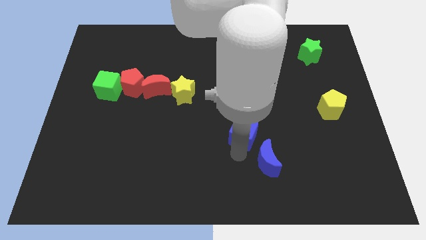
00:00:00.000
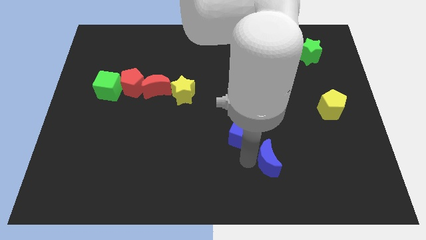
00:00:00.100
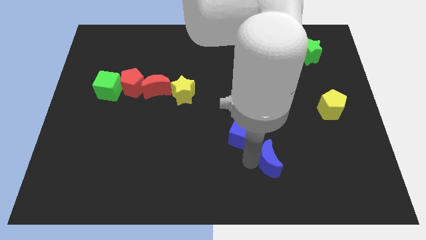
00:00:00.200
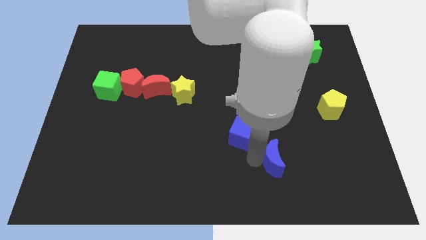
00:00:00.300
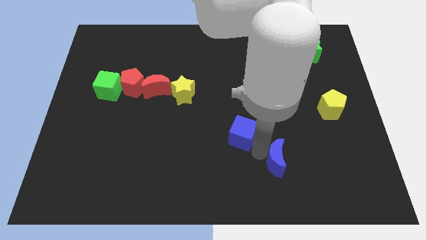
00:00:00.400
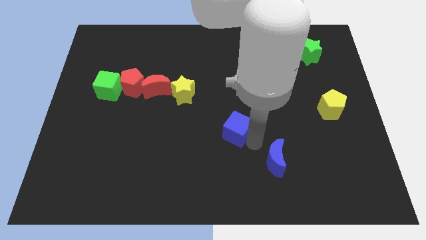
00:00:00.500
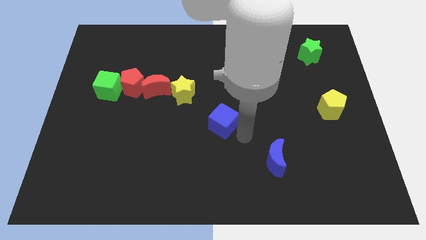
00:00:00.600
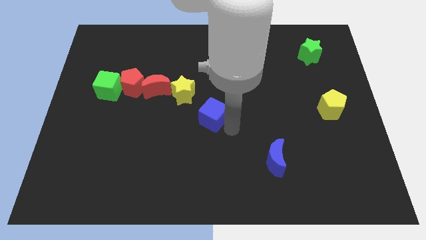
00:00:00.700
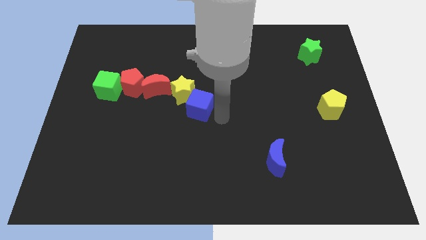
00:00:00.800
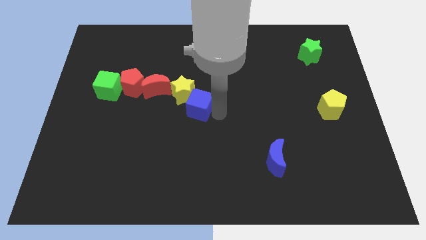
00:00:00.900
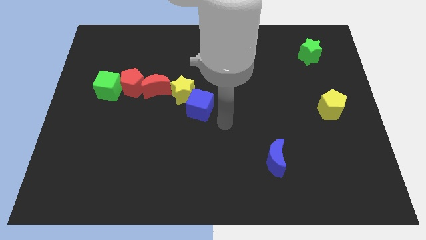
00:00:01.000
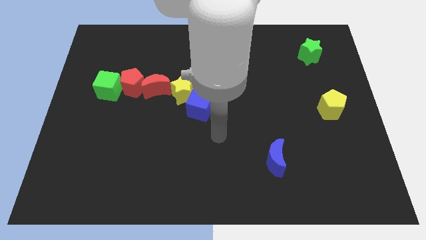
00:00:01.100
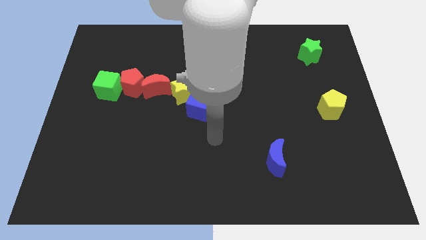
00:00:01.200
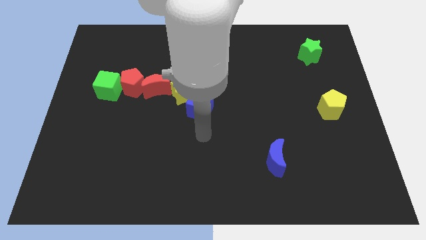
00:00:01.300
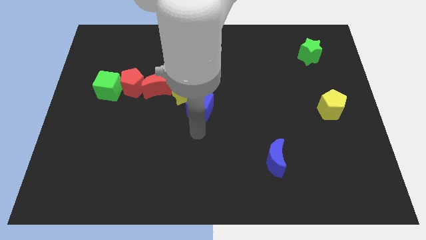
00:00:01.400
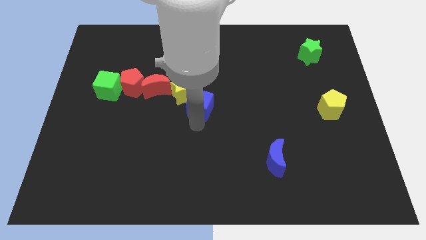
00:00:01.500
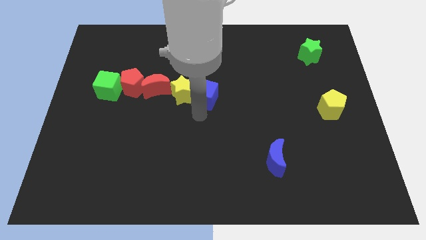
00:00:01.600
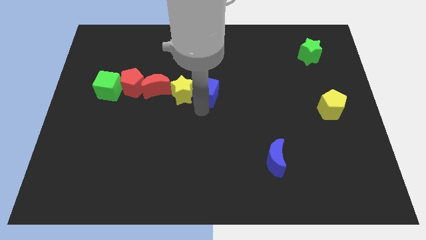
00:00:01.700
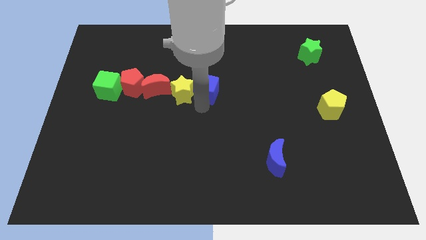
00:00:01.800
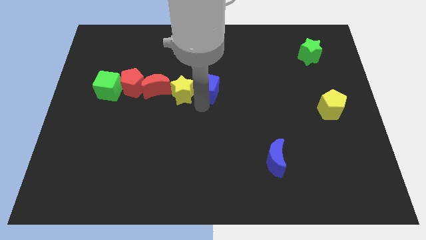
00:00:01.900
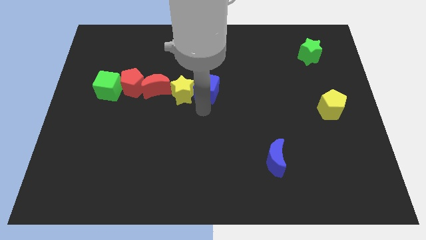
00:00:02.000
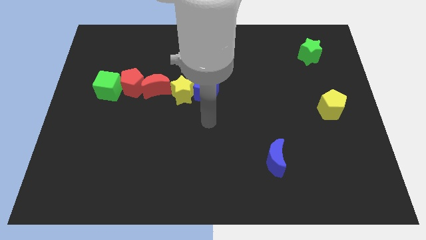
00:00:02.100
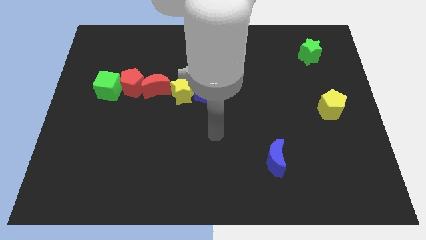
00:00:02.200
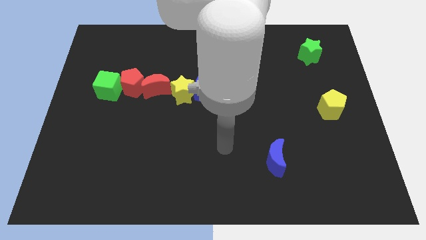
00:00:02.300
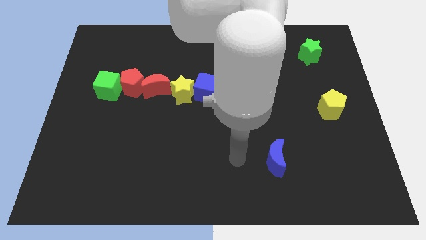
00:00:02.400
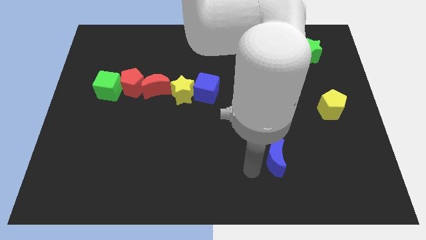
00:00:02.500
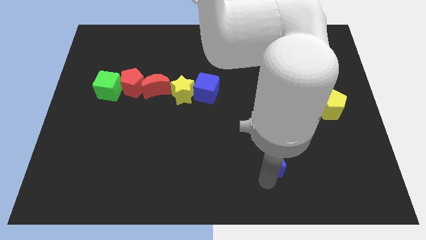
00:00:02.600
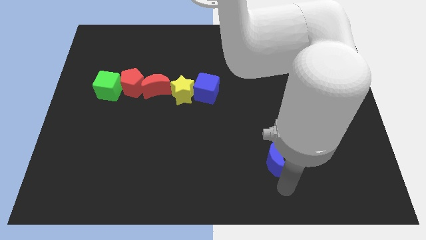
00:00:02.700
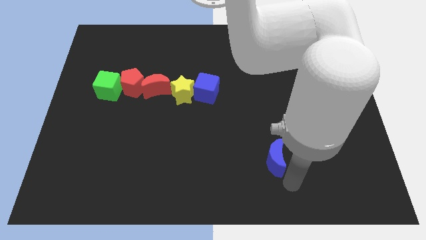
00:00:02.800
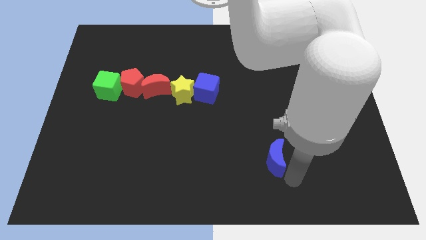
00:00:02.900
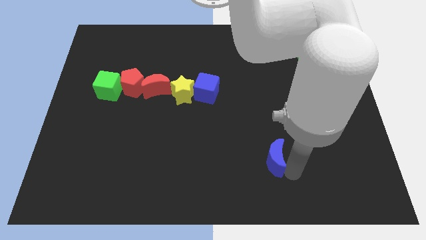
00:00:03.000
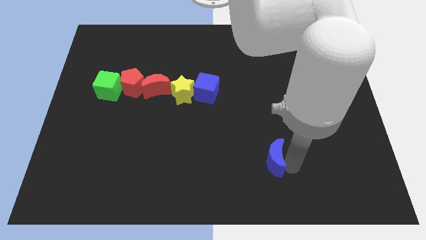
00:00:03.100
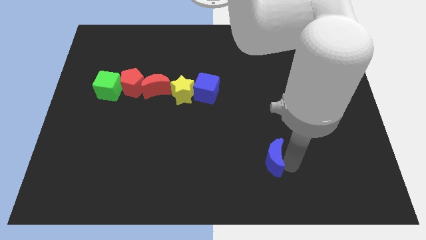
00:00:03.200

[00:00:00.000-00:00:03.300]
move the blue cube at the center of the board

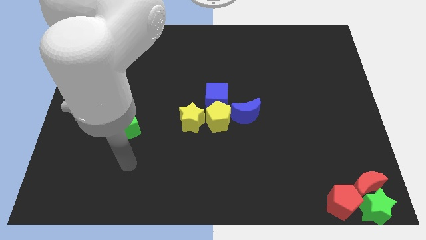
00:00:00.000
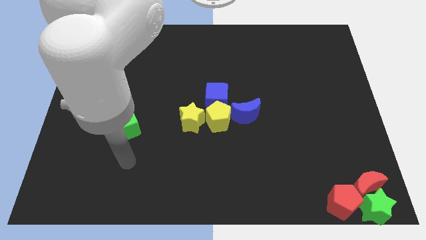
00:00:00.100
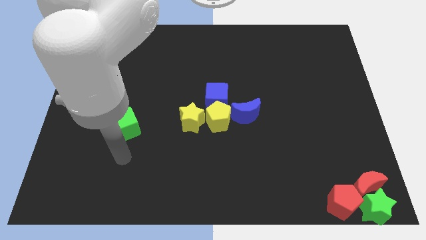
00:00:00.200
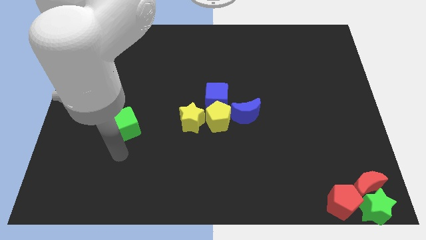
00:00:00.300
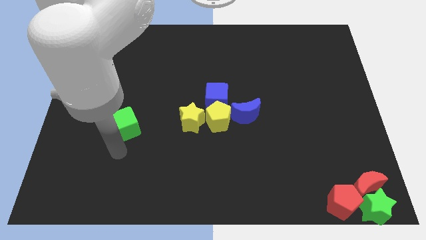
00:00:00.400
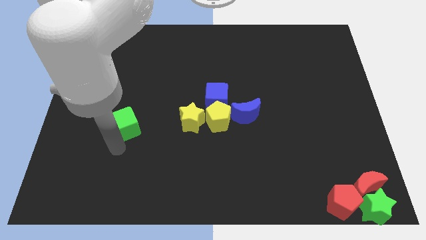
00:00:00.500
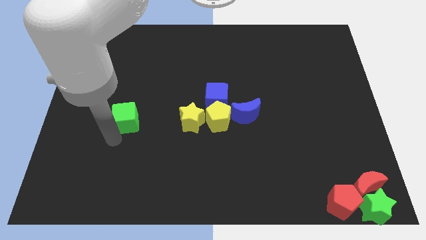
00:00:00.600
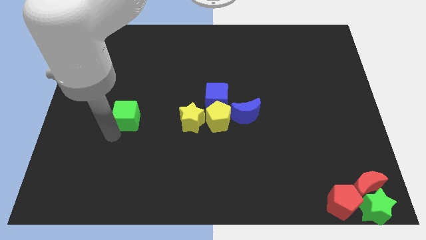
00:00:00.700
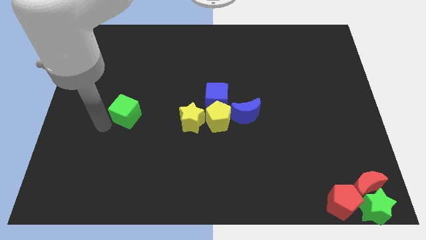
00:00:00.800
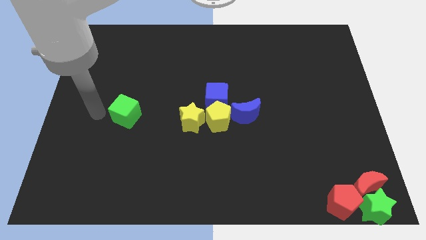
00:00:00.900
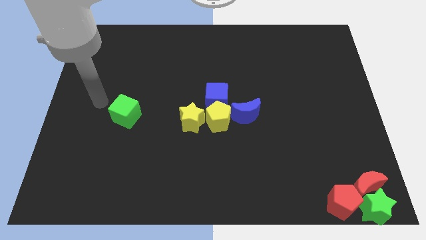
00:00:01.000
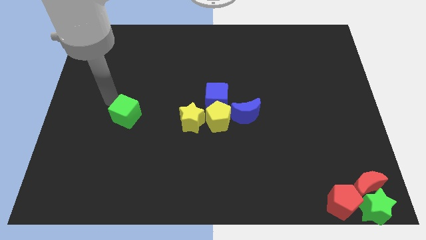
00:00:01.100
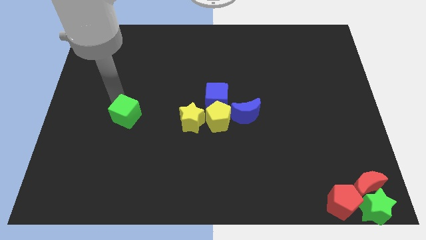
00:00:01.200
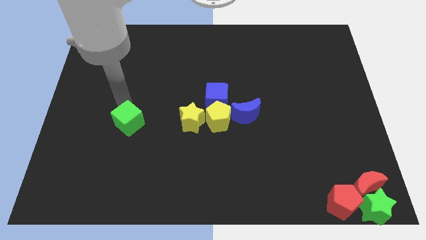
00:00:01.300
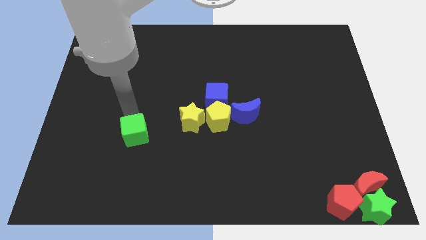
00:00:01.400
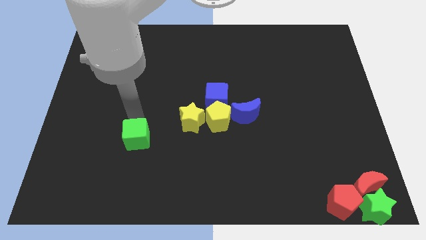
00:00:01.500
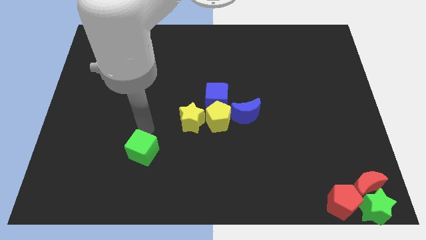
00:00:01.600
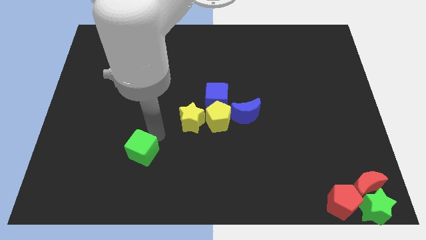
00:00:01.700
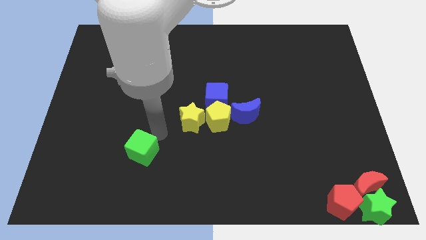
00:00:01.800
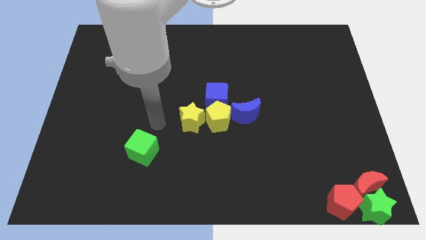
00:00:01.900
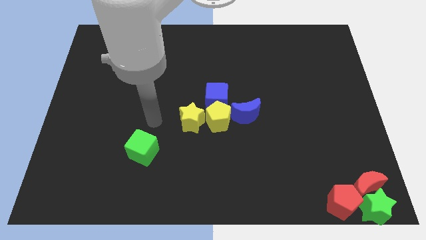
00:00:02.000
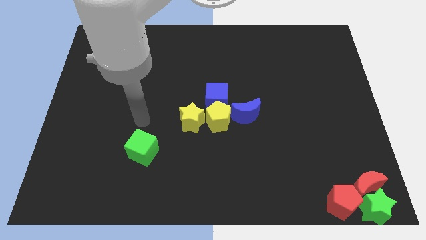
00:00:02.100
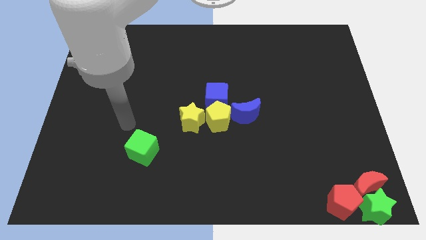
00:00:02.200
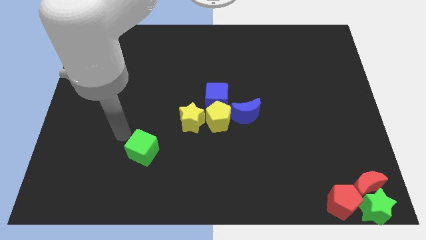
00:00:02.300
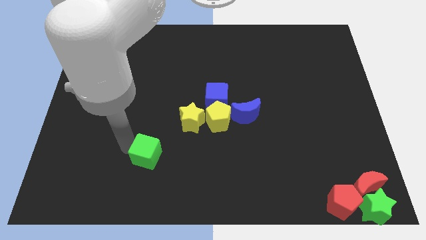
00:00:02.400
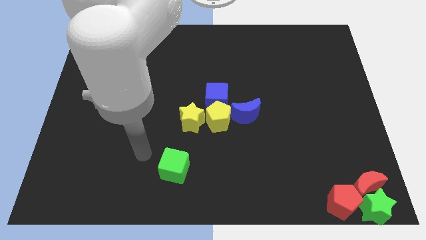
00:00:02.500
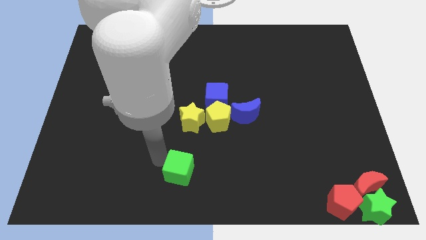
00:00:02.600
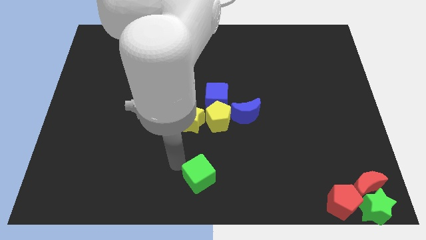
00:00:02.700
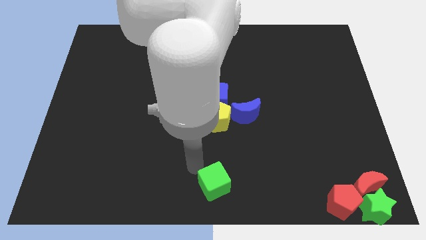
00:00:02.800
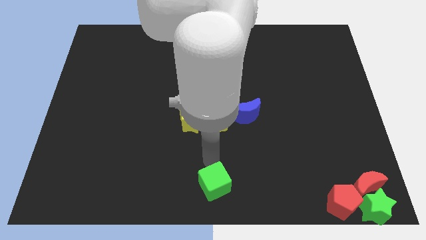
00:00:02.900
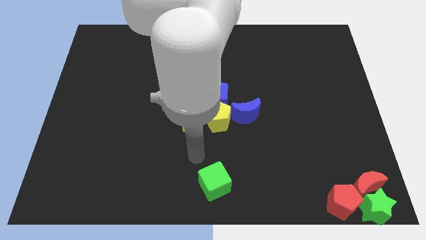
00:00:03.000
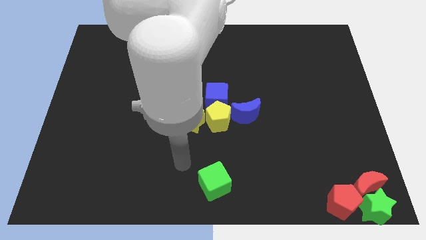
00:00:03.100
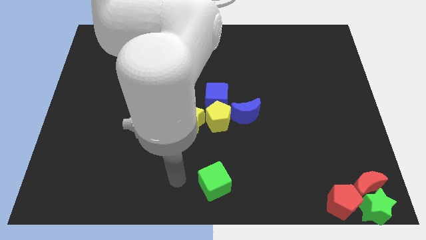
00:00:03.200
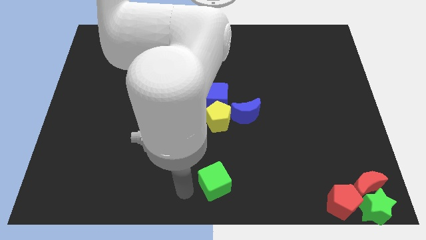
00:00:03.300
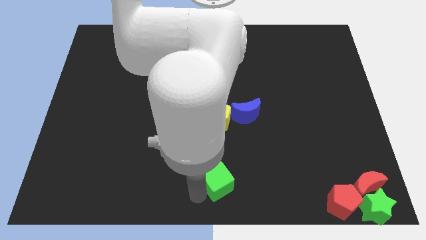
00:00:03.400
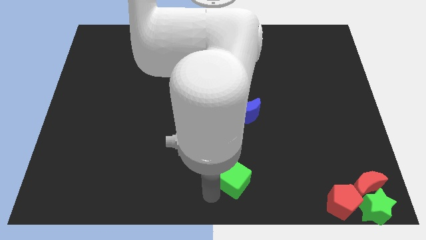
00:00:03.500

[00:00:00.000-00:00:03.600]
place the green cube to the bottom center

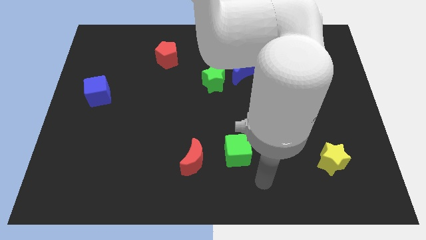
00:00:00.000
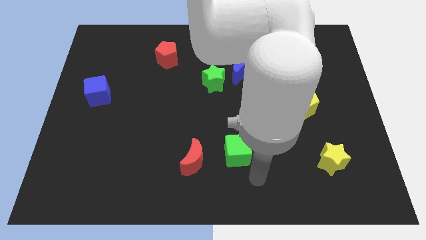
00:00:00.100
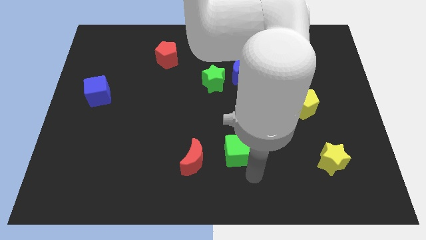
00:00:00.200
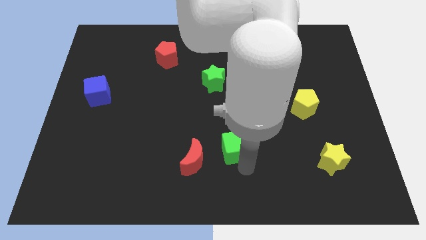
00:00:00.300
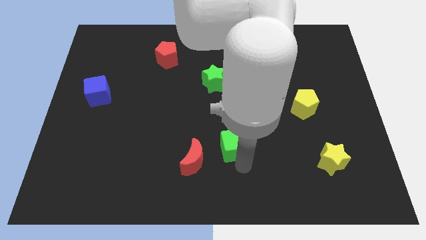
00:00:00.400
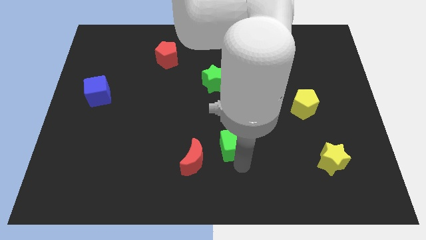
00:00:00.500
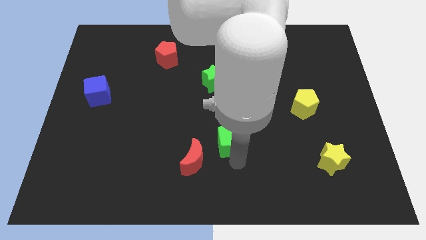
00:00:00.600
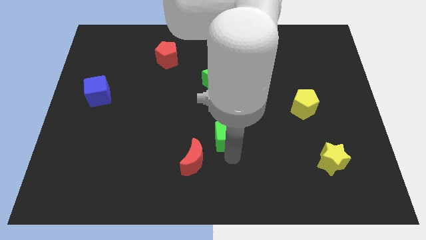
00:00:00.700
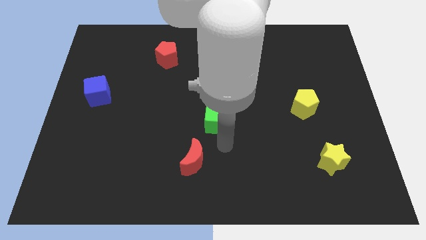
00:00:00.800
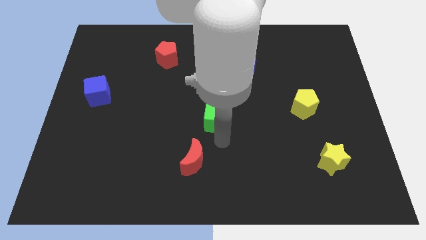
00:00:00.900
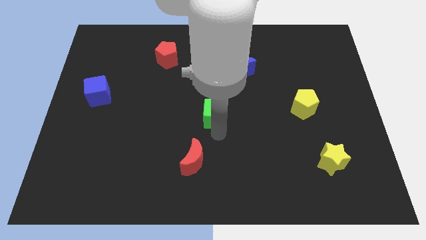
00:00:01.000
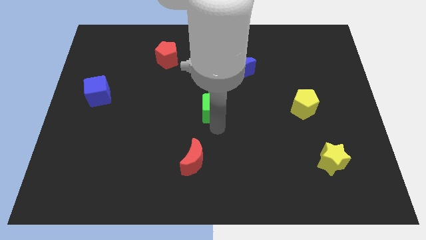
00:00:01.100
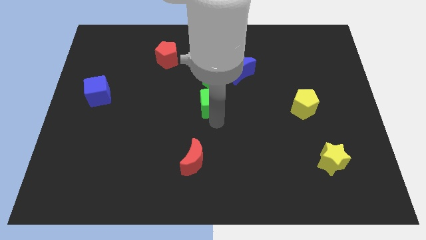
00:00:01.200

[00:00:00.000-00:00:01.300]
move the green cube to the center of the board

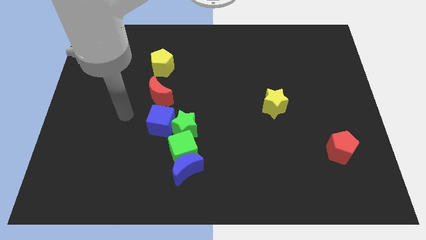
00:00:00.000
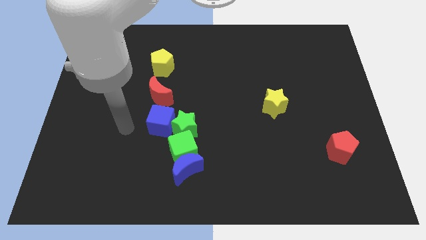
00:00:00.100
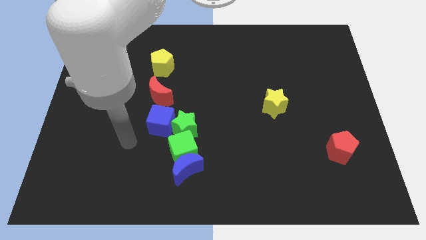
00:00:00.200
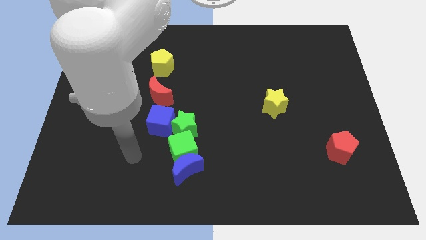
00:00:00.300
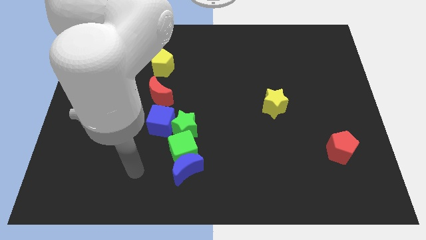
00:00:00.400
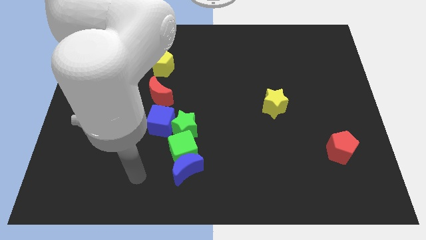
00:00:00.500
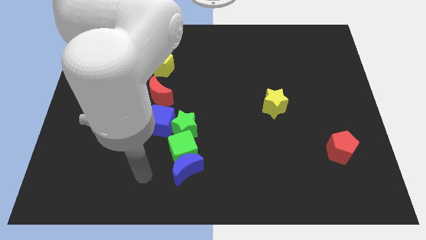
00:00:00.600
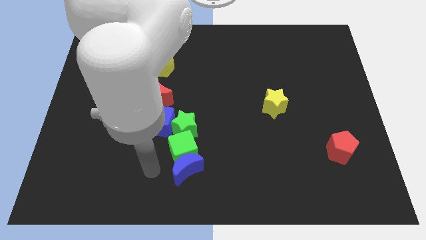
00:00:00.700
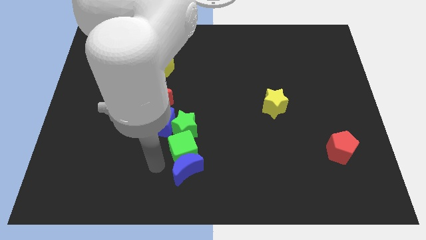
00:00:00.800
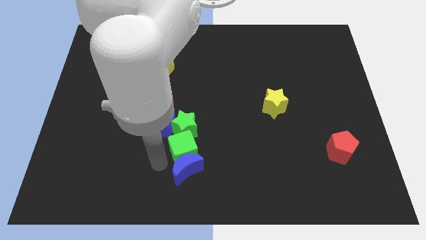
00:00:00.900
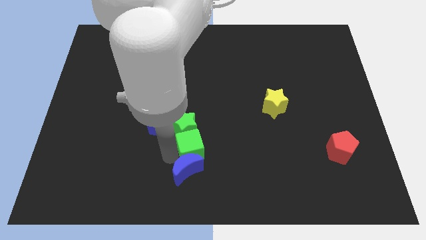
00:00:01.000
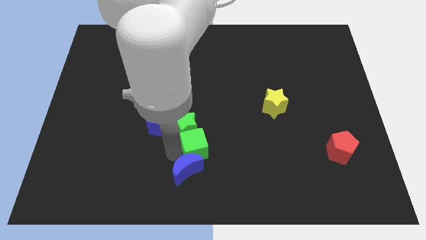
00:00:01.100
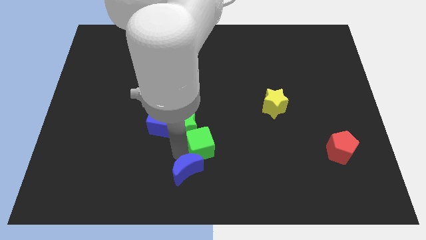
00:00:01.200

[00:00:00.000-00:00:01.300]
push the green cube slightly to the right
